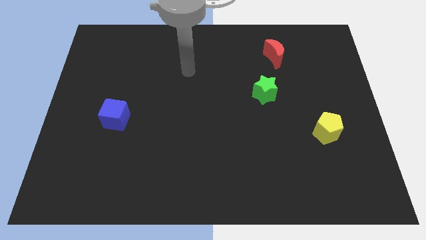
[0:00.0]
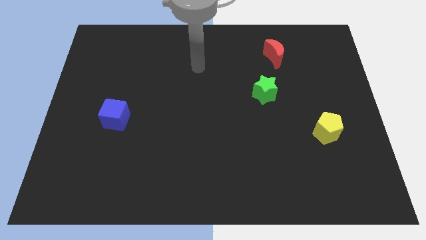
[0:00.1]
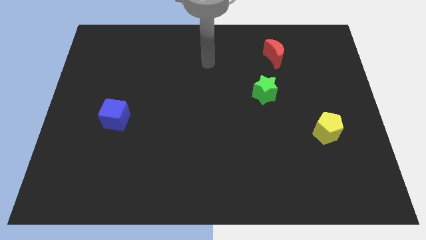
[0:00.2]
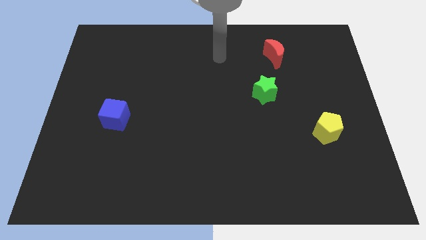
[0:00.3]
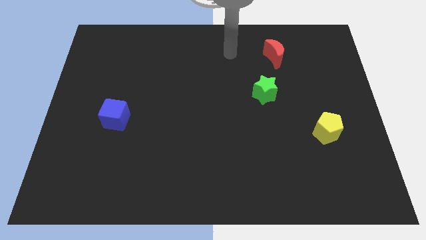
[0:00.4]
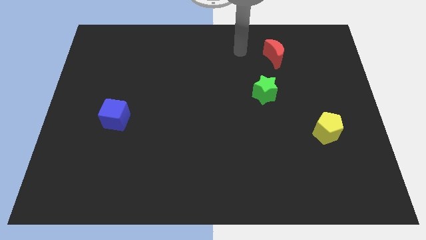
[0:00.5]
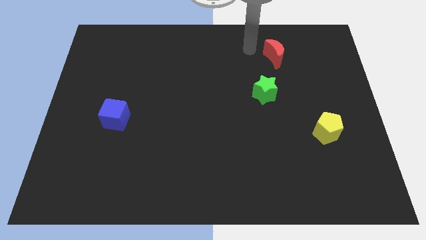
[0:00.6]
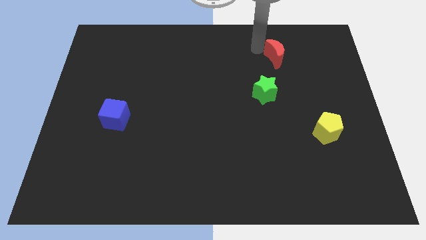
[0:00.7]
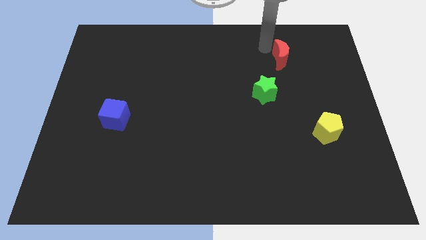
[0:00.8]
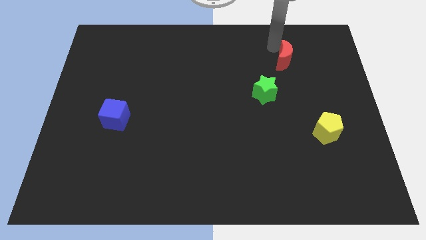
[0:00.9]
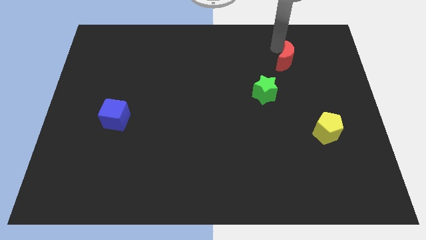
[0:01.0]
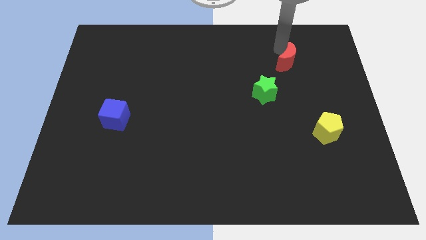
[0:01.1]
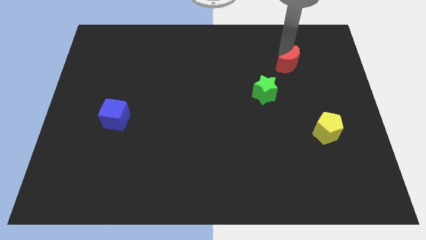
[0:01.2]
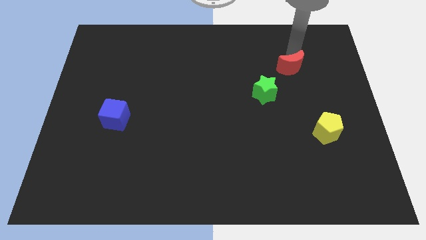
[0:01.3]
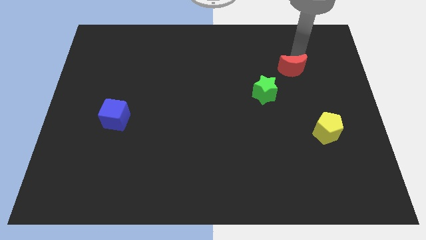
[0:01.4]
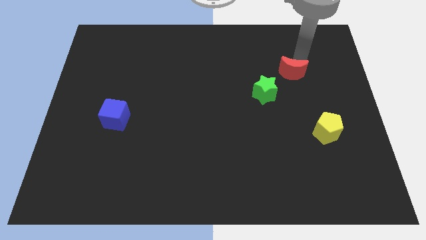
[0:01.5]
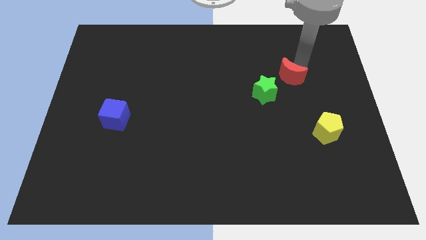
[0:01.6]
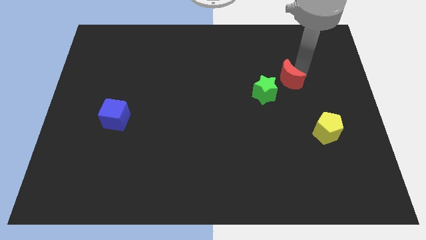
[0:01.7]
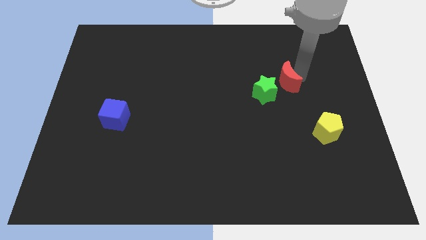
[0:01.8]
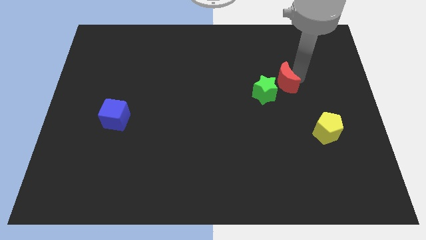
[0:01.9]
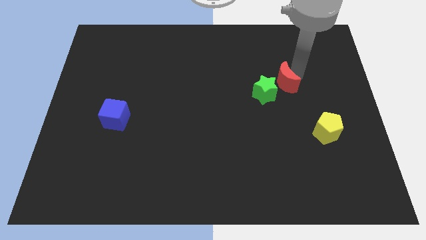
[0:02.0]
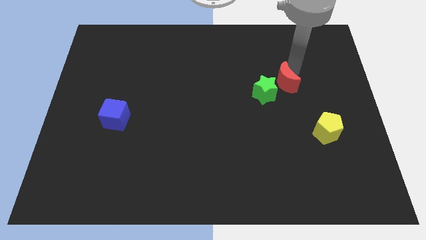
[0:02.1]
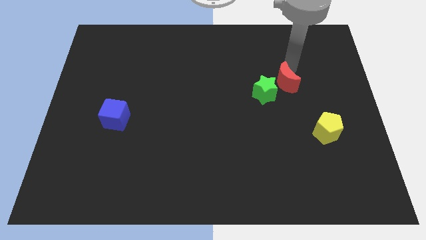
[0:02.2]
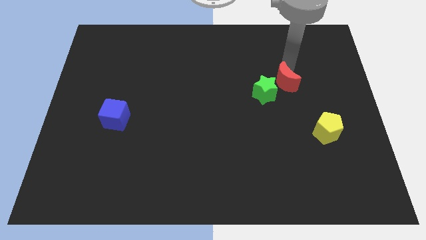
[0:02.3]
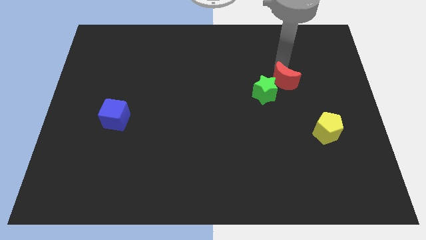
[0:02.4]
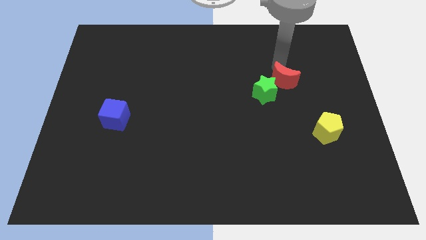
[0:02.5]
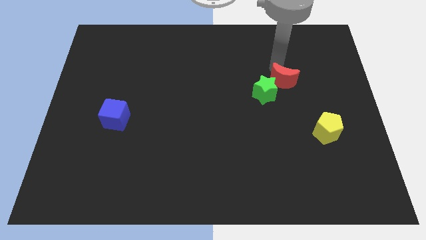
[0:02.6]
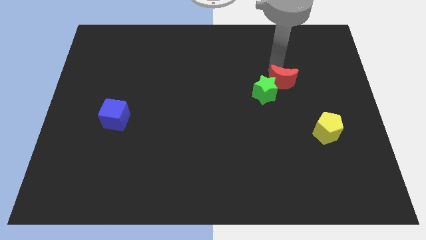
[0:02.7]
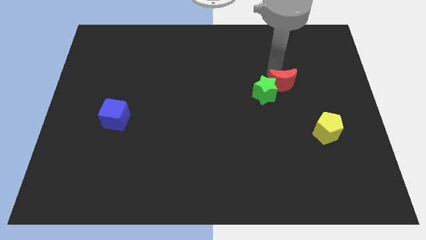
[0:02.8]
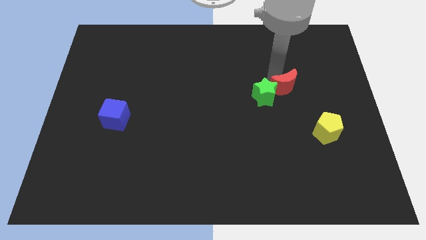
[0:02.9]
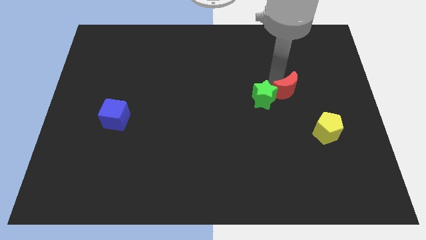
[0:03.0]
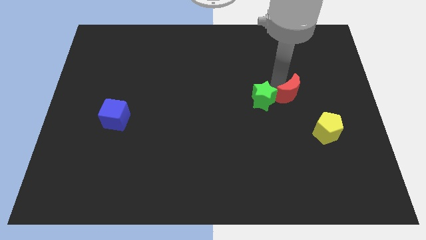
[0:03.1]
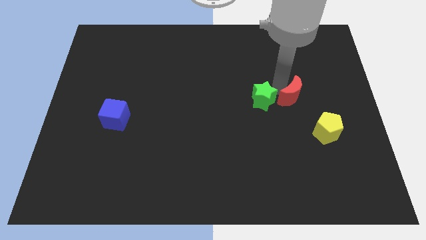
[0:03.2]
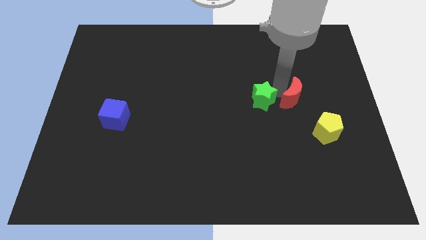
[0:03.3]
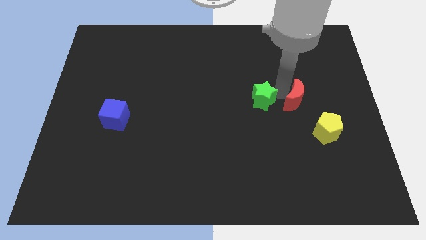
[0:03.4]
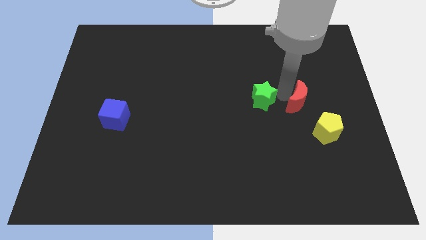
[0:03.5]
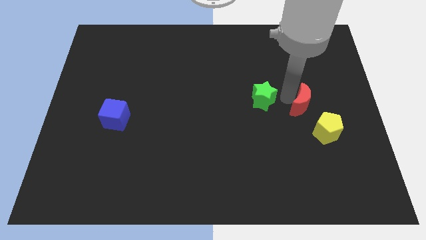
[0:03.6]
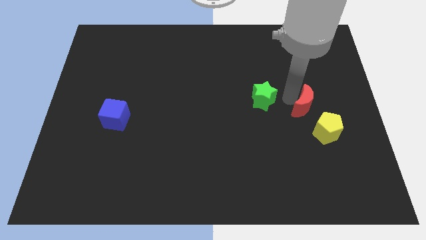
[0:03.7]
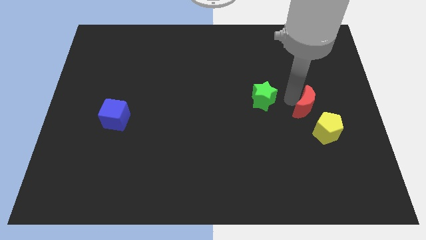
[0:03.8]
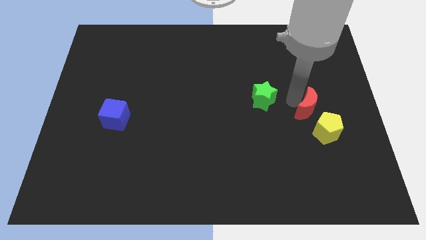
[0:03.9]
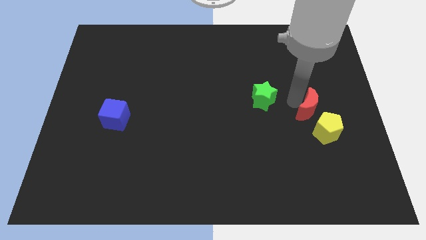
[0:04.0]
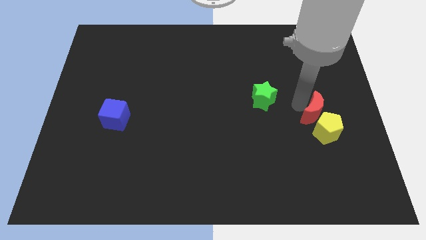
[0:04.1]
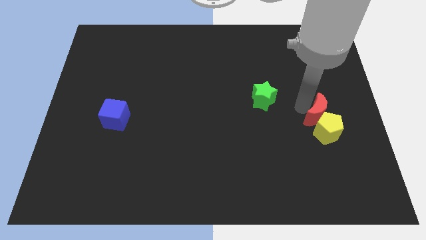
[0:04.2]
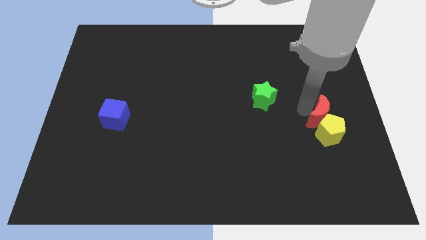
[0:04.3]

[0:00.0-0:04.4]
move the moon to the yellow block

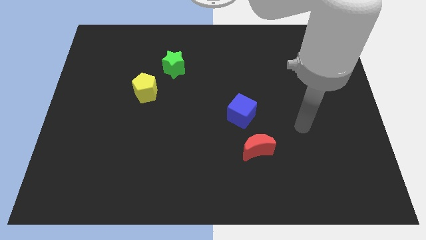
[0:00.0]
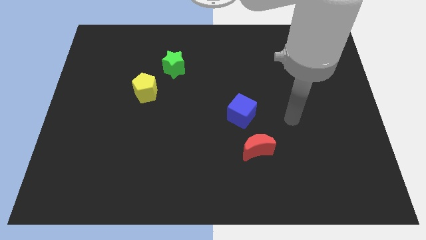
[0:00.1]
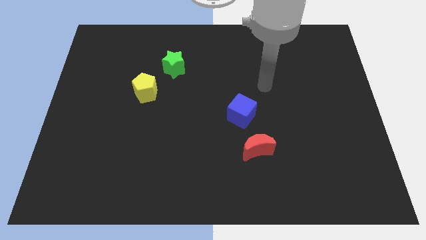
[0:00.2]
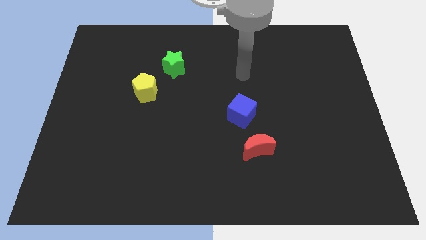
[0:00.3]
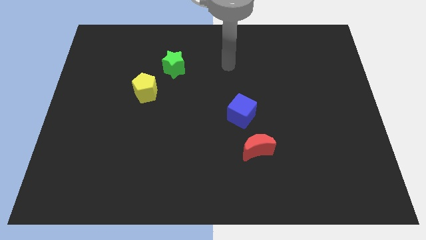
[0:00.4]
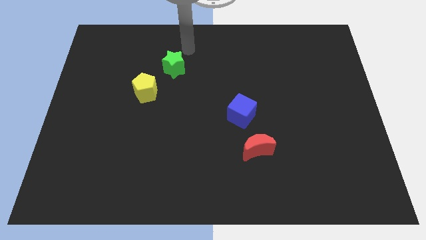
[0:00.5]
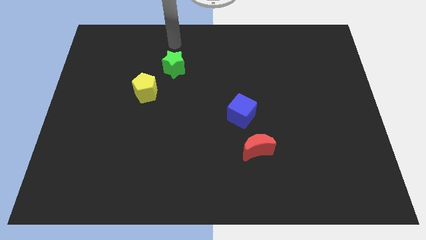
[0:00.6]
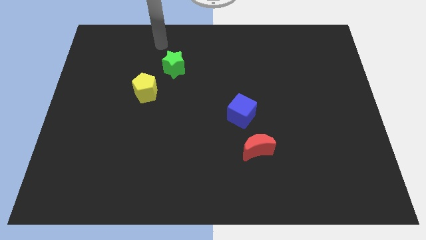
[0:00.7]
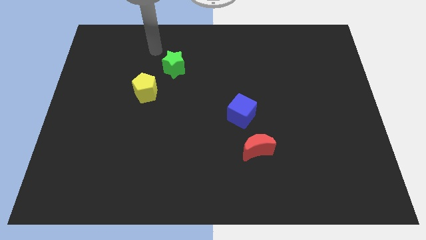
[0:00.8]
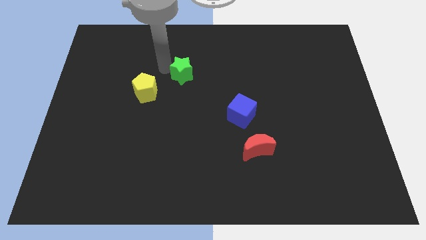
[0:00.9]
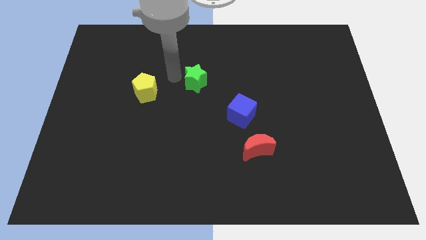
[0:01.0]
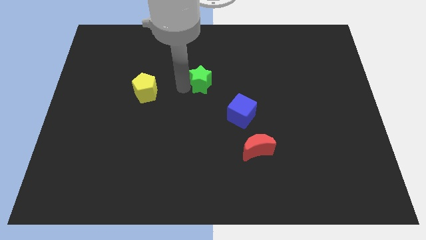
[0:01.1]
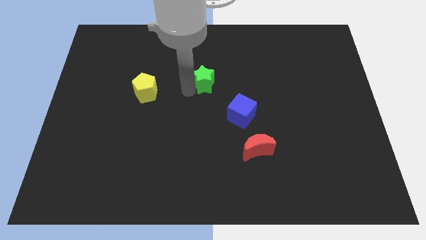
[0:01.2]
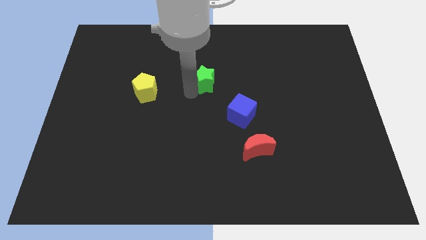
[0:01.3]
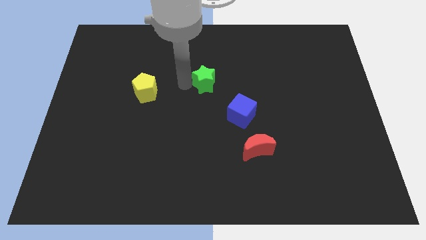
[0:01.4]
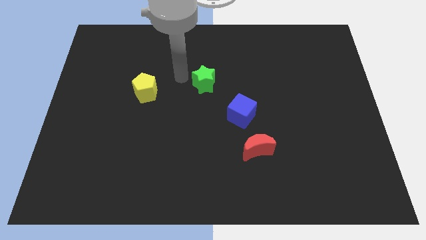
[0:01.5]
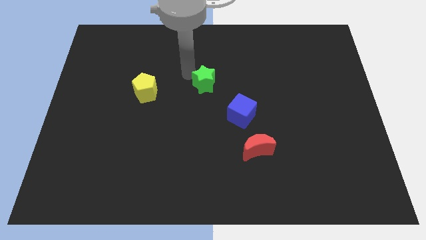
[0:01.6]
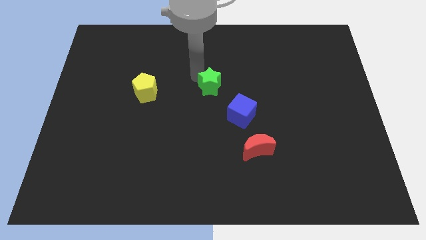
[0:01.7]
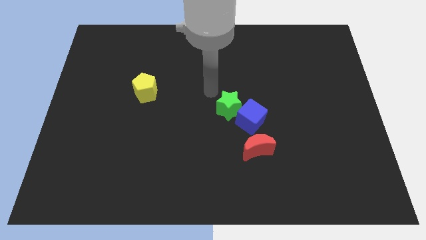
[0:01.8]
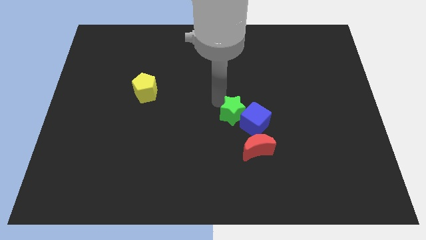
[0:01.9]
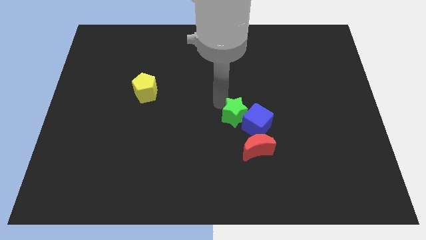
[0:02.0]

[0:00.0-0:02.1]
push the green block towards the blue cube

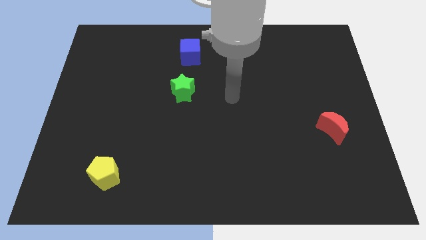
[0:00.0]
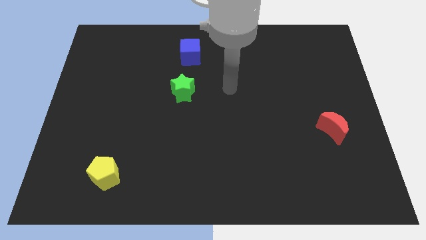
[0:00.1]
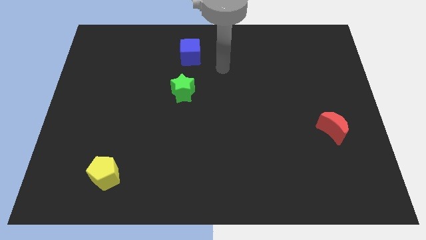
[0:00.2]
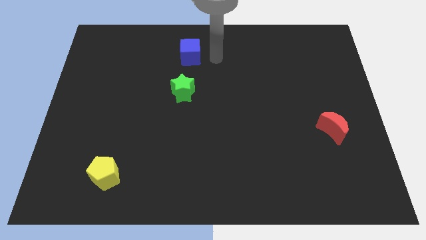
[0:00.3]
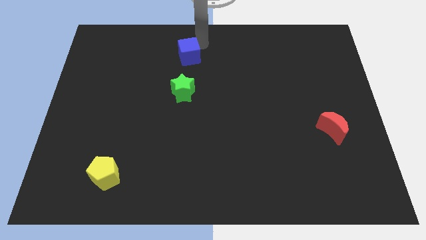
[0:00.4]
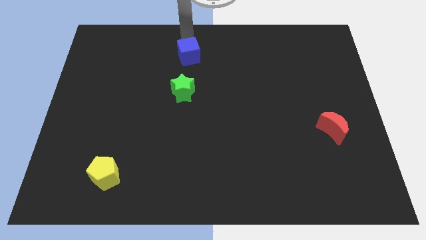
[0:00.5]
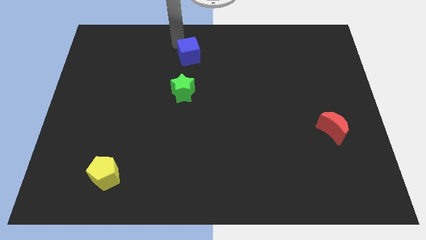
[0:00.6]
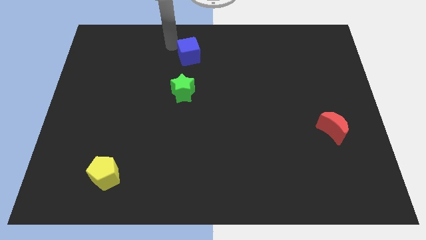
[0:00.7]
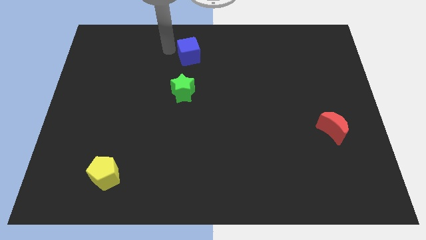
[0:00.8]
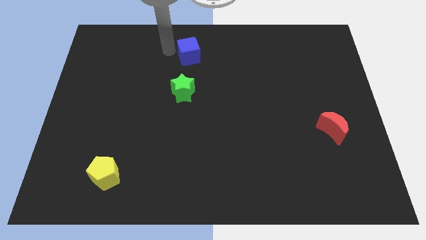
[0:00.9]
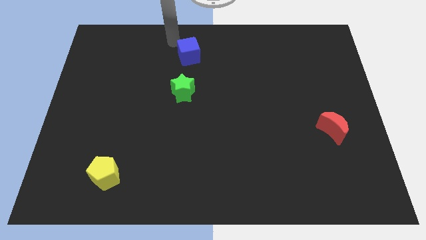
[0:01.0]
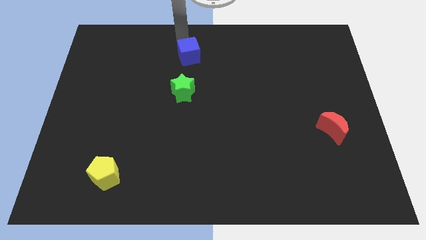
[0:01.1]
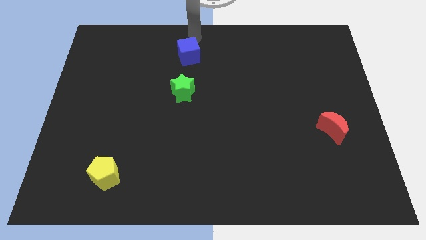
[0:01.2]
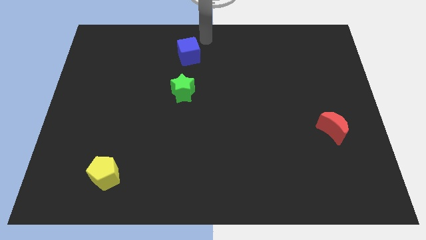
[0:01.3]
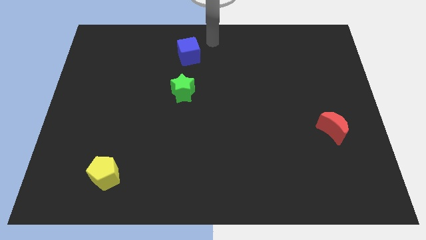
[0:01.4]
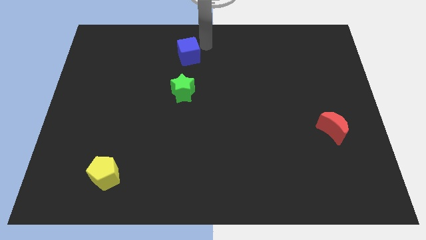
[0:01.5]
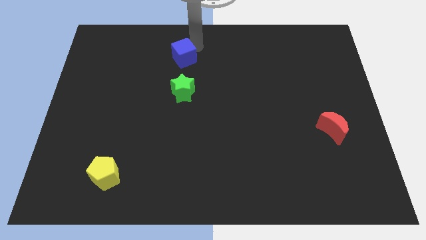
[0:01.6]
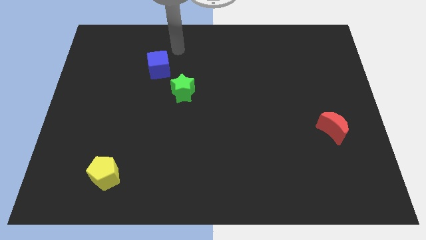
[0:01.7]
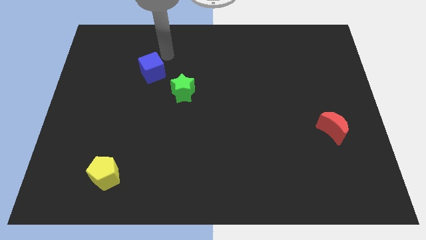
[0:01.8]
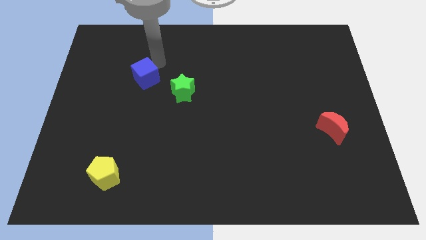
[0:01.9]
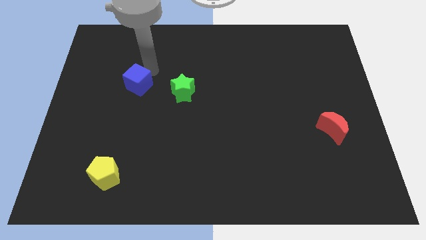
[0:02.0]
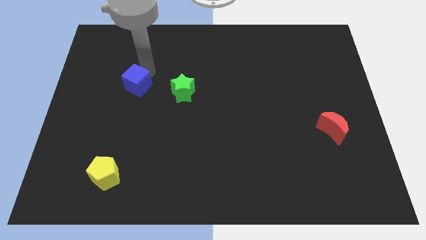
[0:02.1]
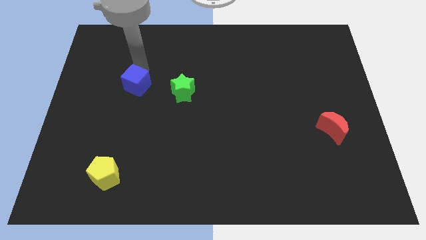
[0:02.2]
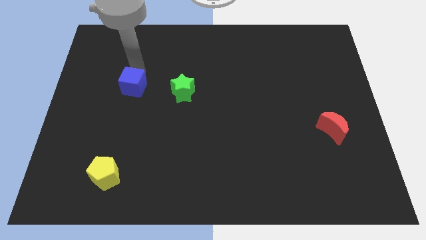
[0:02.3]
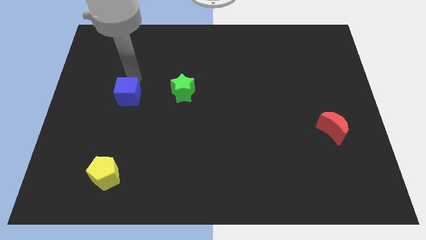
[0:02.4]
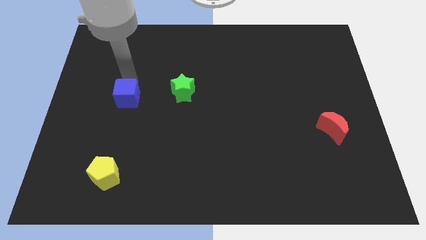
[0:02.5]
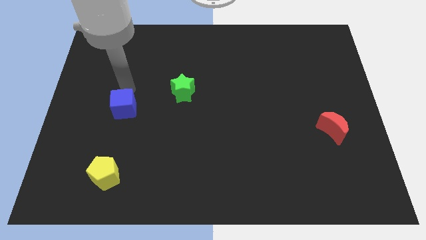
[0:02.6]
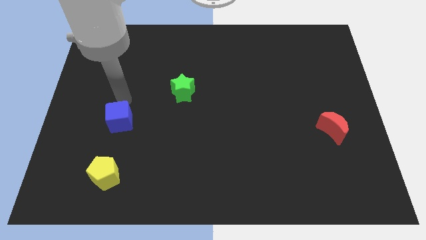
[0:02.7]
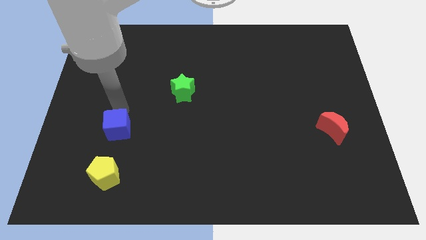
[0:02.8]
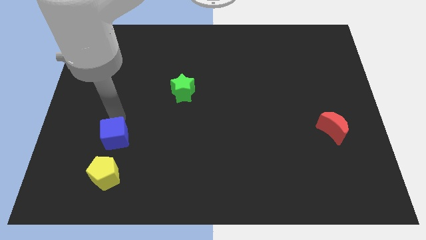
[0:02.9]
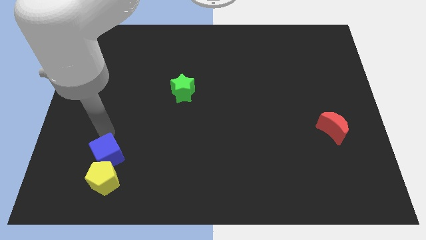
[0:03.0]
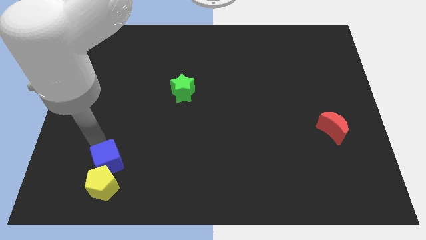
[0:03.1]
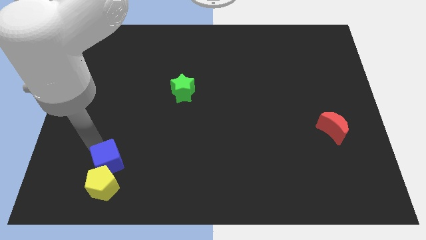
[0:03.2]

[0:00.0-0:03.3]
slide the blue block close to the yellow pentagon
